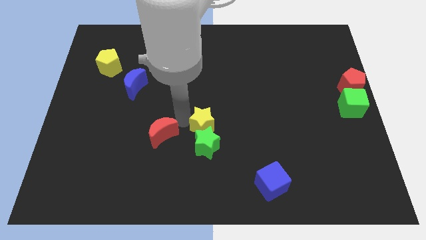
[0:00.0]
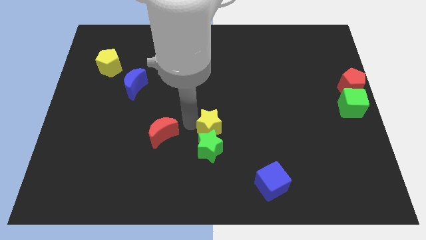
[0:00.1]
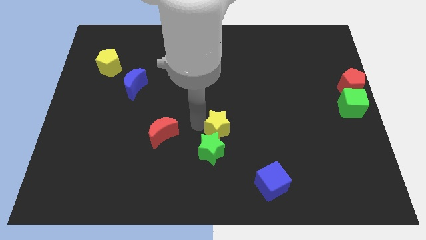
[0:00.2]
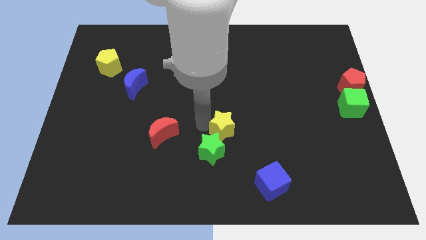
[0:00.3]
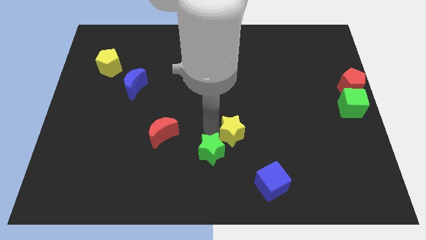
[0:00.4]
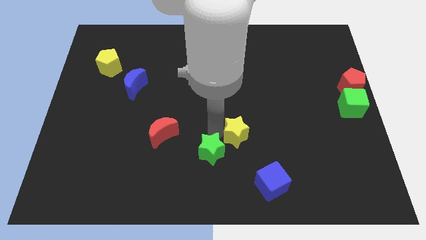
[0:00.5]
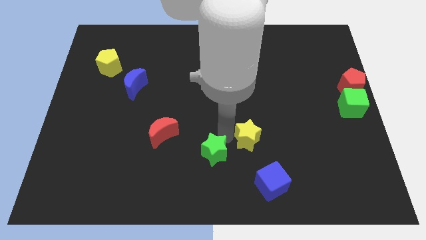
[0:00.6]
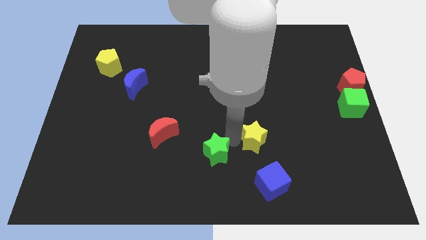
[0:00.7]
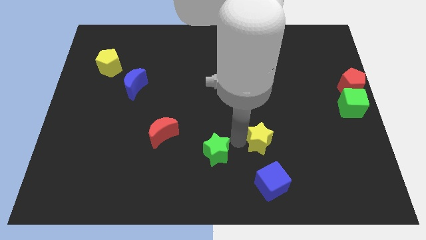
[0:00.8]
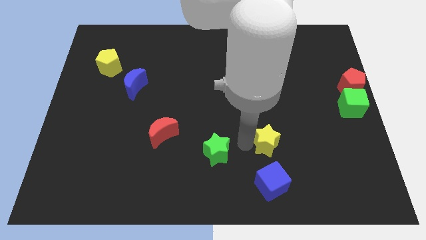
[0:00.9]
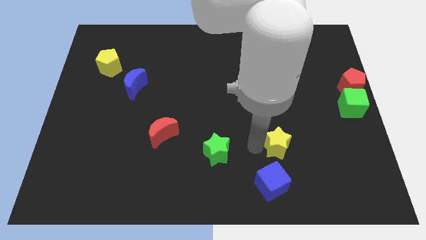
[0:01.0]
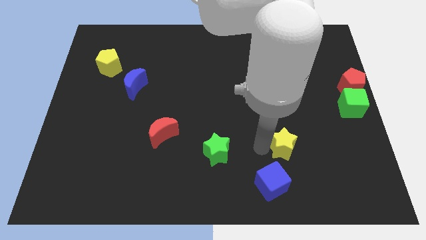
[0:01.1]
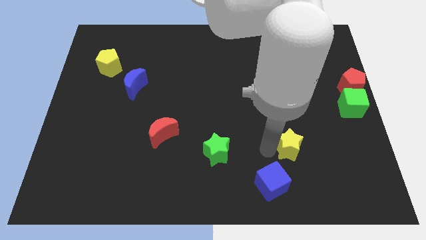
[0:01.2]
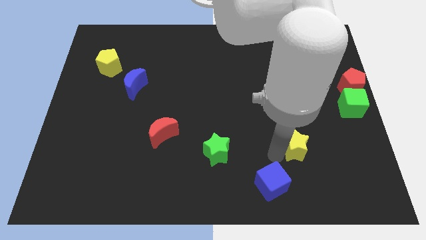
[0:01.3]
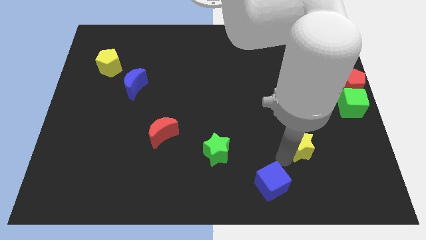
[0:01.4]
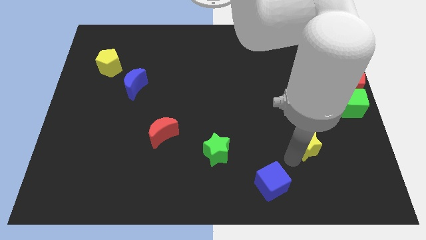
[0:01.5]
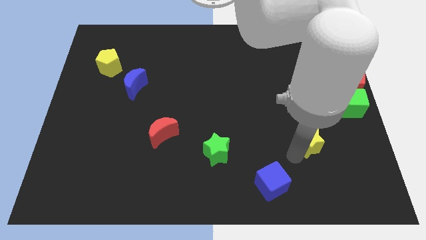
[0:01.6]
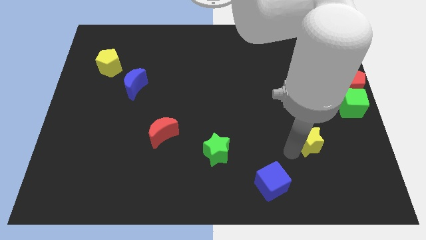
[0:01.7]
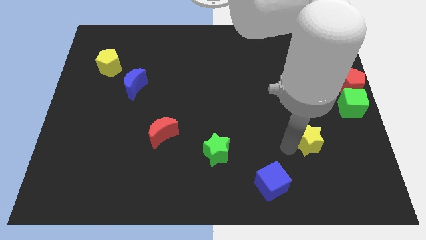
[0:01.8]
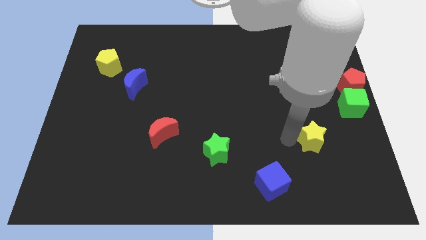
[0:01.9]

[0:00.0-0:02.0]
separate the yellow star from the green star

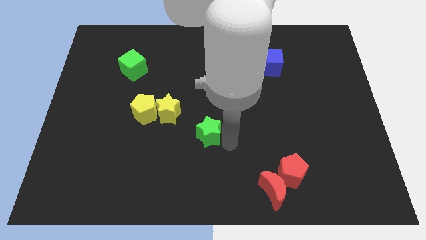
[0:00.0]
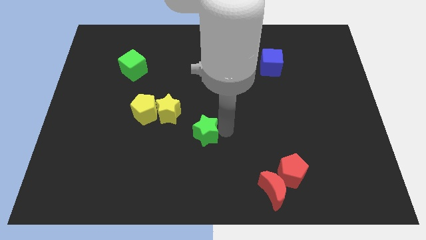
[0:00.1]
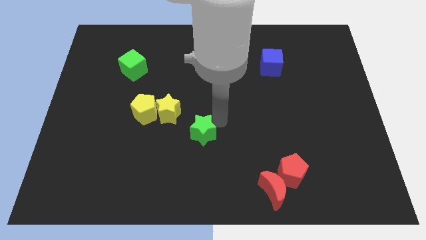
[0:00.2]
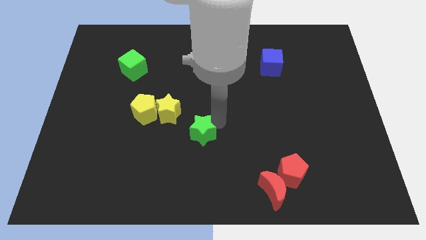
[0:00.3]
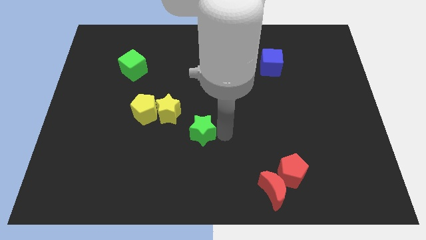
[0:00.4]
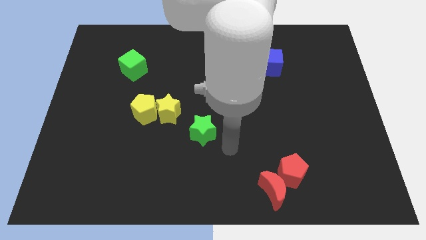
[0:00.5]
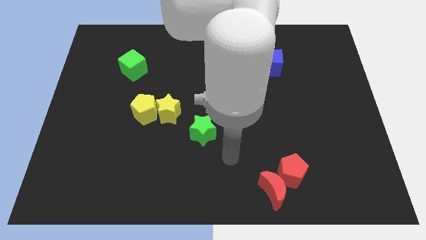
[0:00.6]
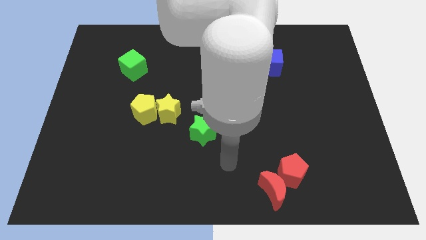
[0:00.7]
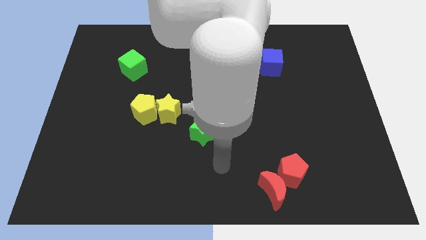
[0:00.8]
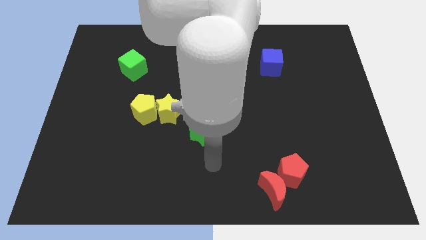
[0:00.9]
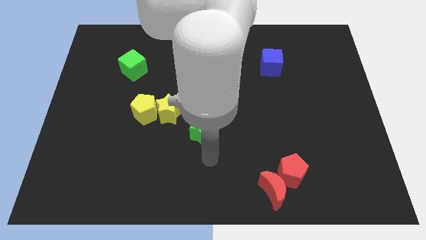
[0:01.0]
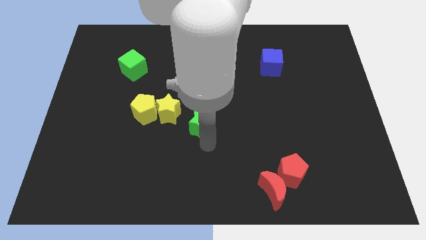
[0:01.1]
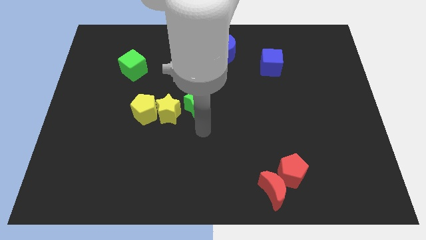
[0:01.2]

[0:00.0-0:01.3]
place the green star right to the yellow star

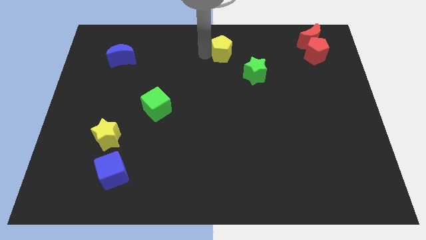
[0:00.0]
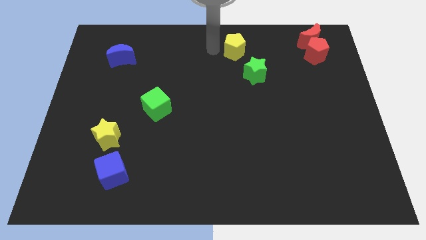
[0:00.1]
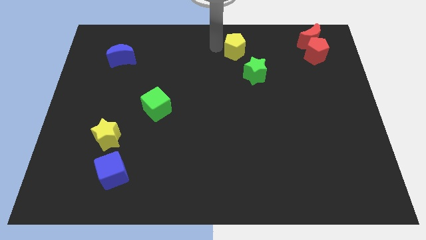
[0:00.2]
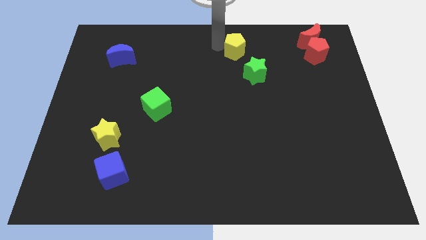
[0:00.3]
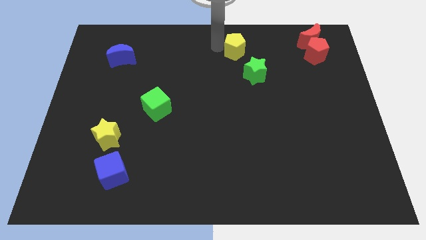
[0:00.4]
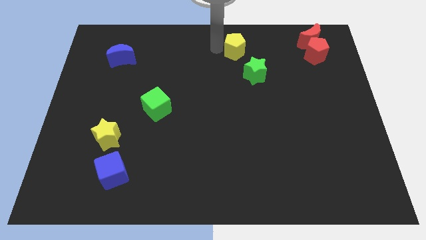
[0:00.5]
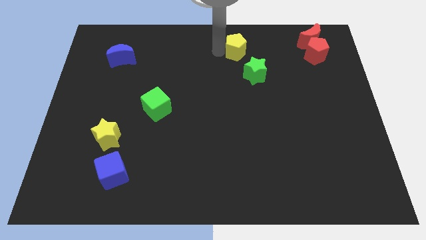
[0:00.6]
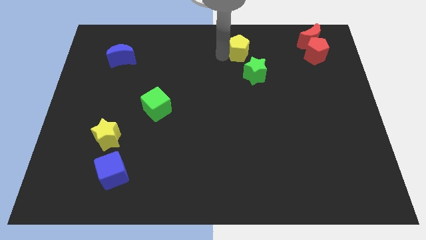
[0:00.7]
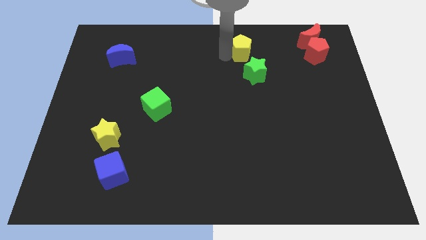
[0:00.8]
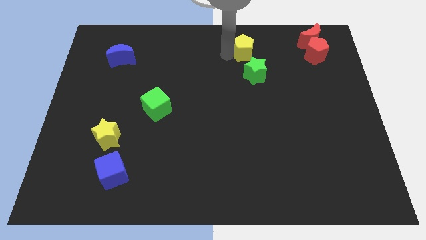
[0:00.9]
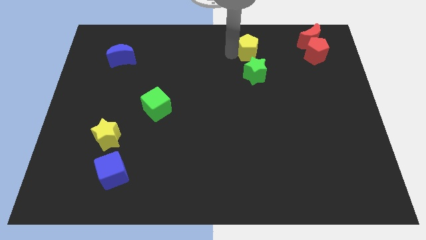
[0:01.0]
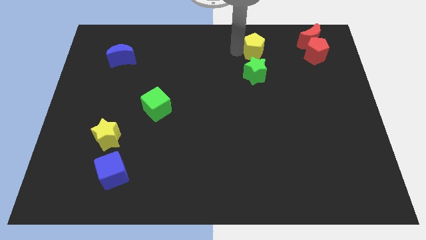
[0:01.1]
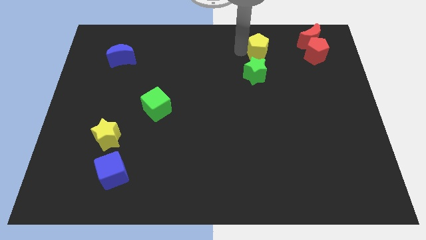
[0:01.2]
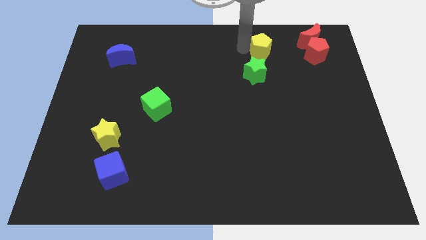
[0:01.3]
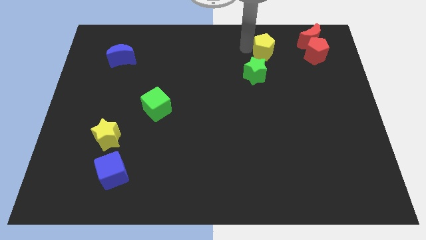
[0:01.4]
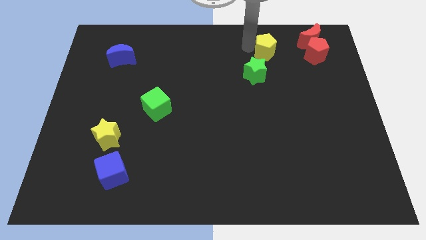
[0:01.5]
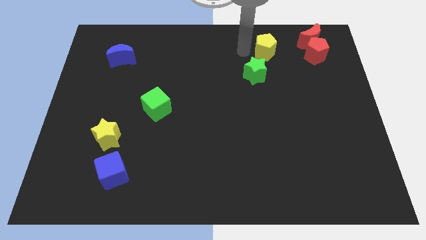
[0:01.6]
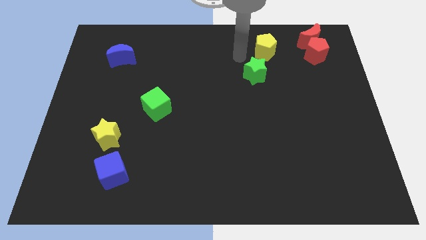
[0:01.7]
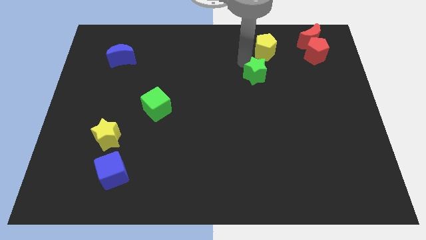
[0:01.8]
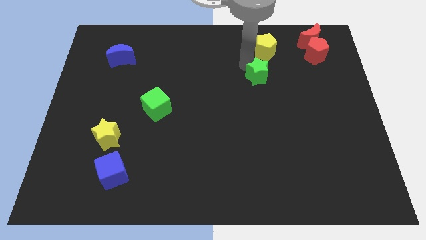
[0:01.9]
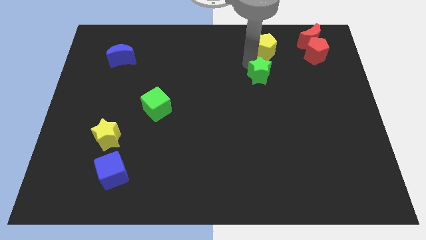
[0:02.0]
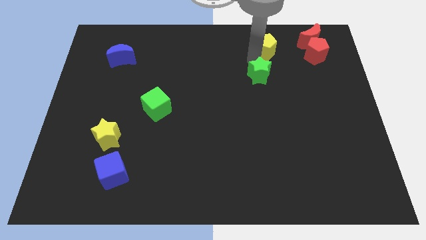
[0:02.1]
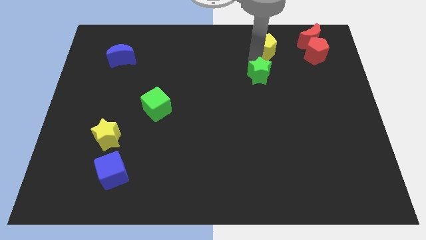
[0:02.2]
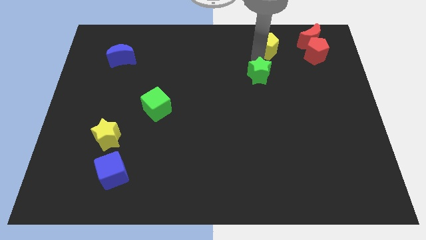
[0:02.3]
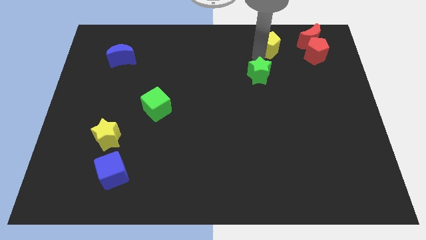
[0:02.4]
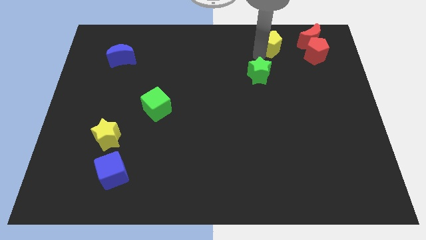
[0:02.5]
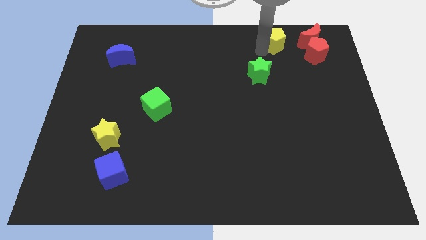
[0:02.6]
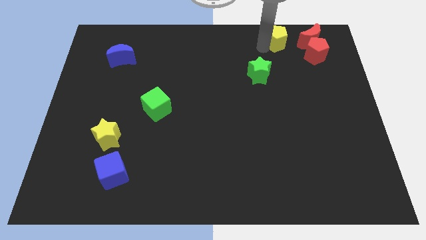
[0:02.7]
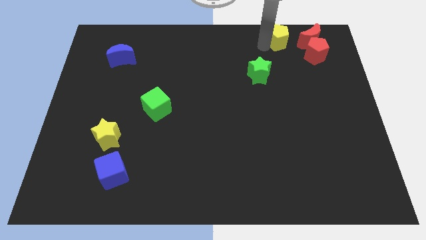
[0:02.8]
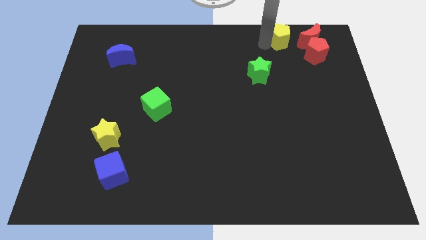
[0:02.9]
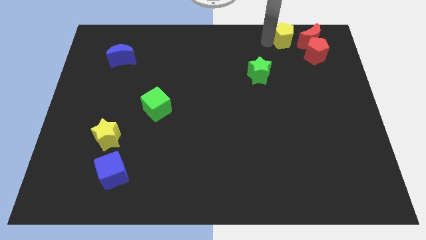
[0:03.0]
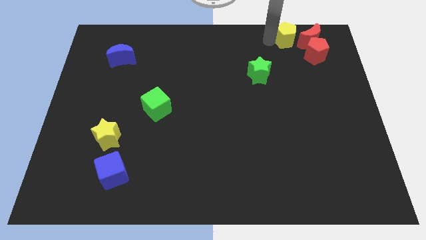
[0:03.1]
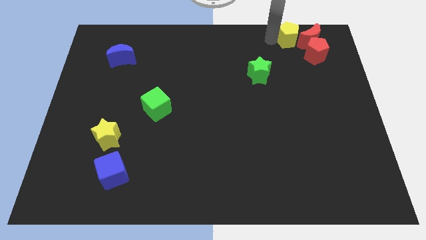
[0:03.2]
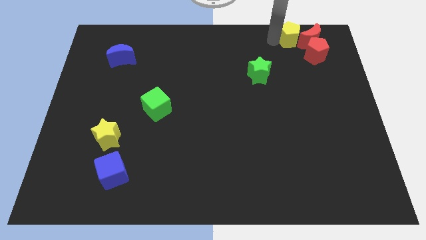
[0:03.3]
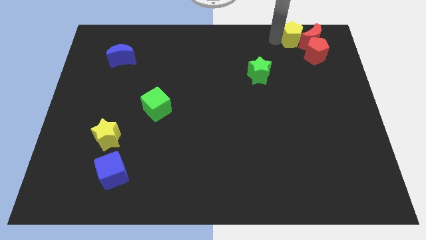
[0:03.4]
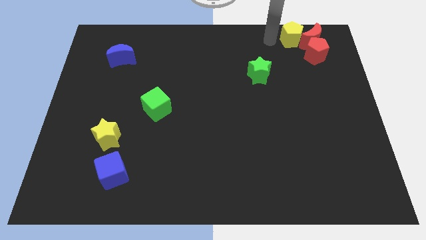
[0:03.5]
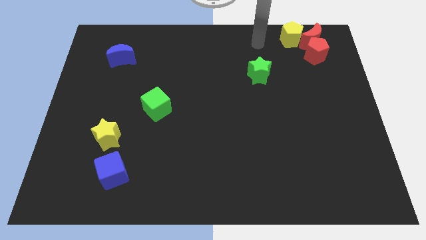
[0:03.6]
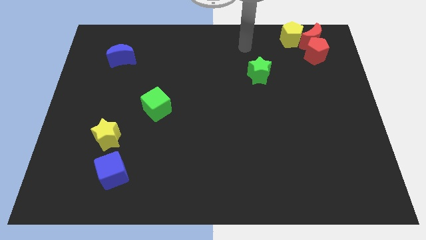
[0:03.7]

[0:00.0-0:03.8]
move yellow pentagon into red moon

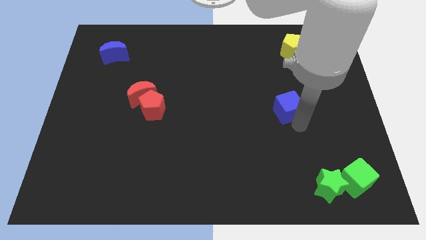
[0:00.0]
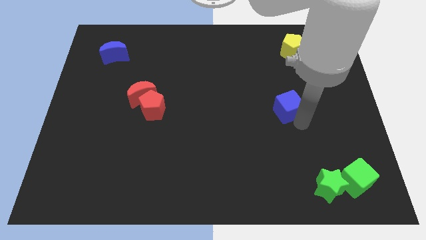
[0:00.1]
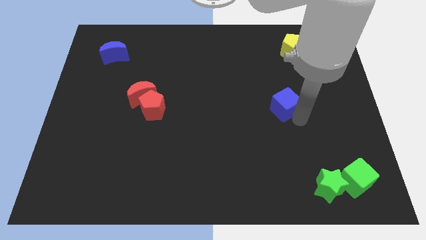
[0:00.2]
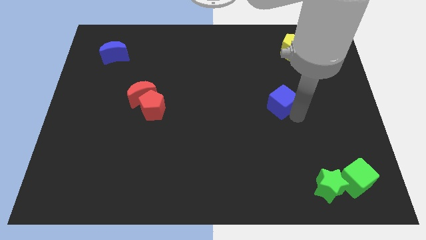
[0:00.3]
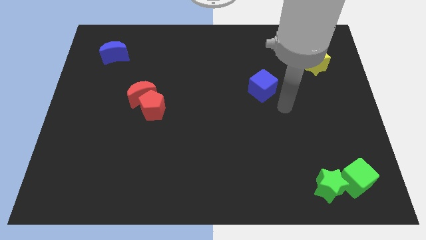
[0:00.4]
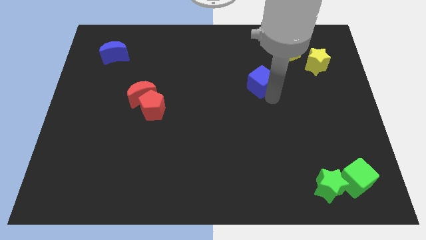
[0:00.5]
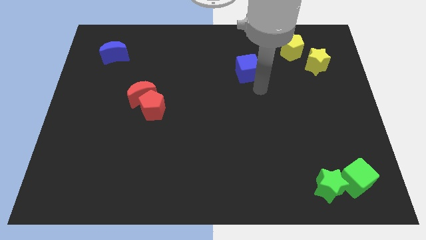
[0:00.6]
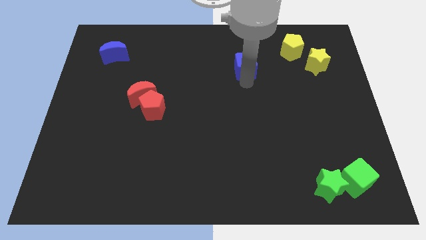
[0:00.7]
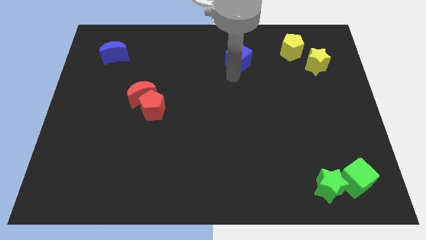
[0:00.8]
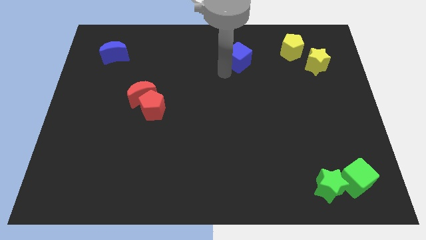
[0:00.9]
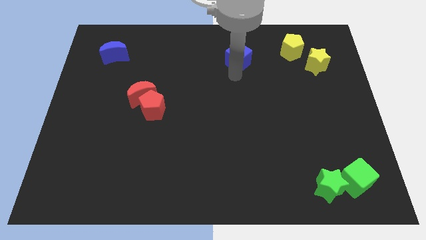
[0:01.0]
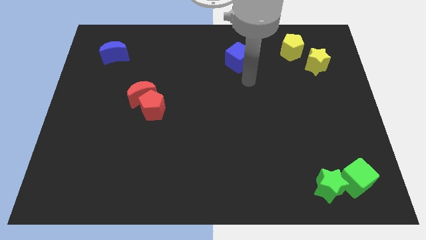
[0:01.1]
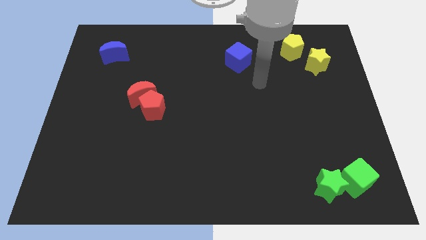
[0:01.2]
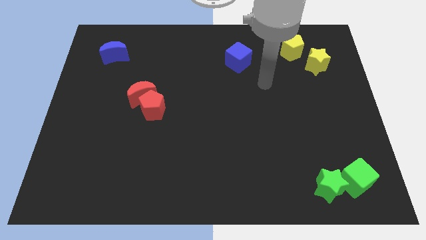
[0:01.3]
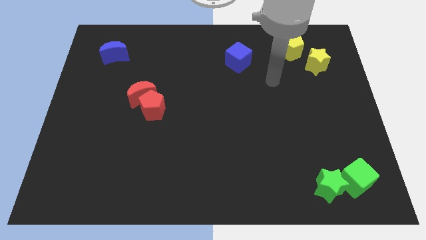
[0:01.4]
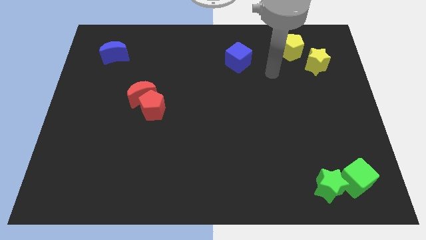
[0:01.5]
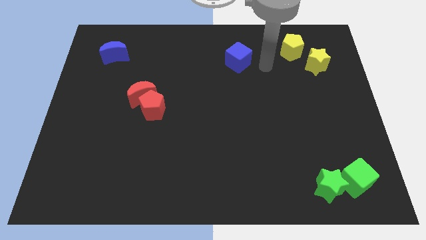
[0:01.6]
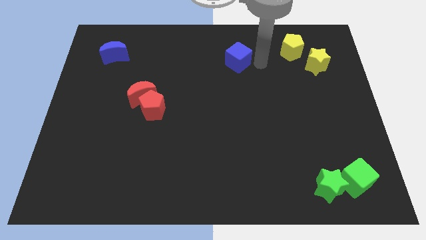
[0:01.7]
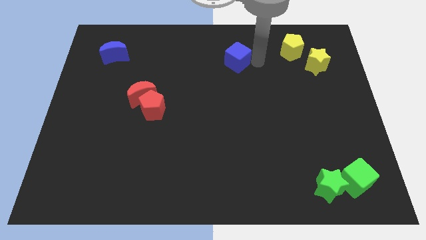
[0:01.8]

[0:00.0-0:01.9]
place blue cube parallel to yellow pentagon
